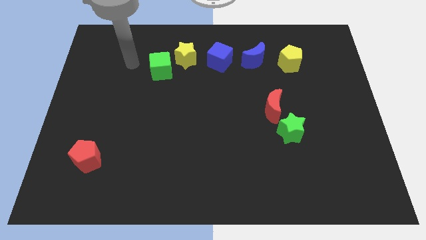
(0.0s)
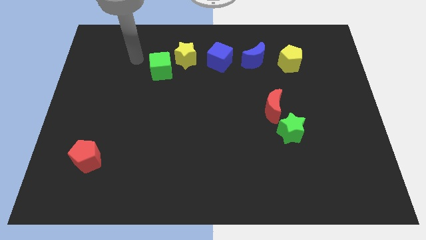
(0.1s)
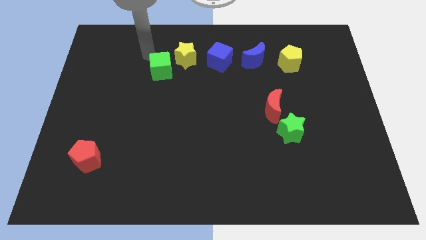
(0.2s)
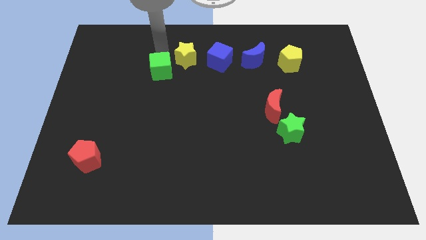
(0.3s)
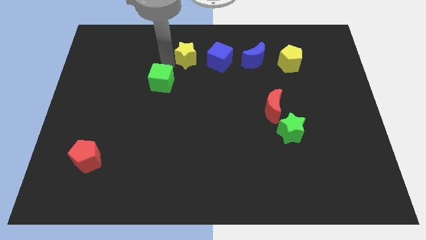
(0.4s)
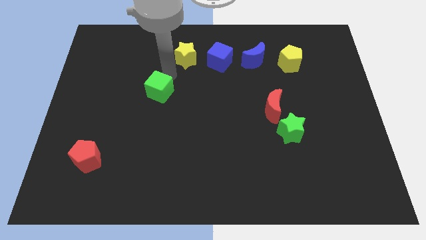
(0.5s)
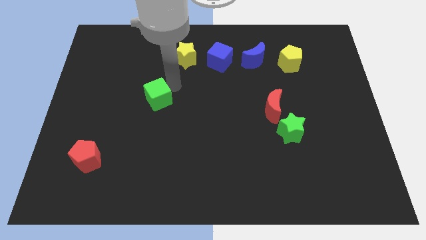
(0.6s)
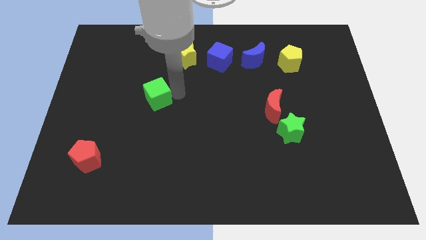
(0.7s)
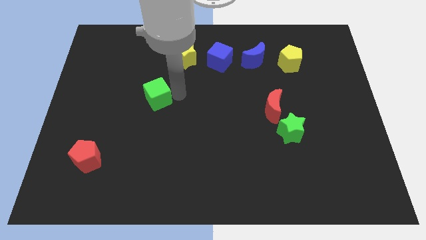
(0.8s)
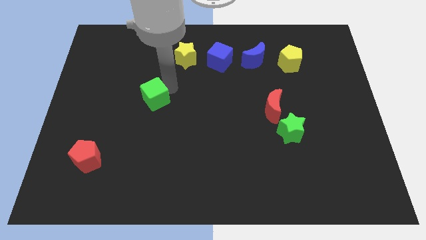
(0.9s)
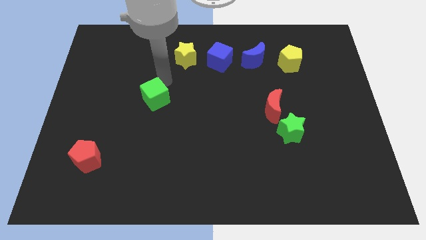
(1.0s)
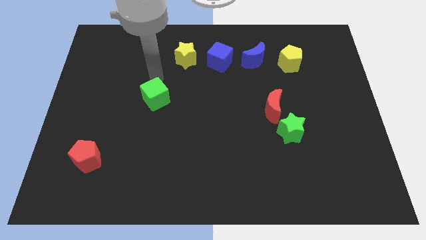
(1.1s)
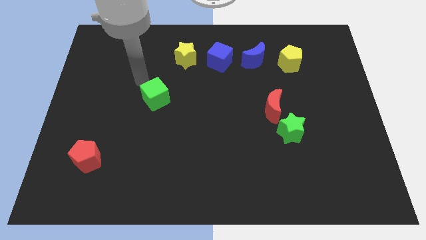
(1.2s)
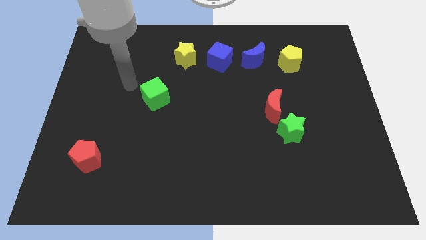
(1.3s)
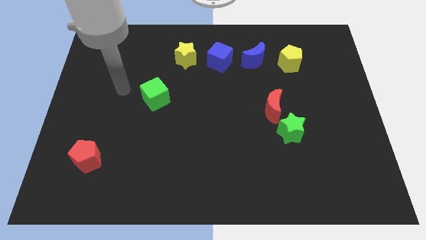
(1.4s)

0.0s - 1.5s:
push the green cube diagonally on the bottom left side of the yellow star

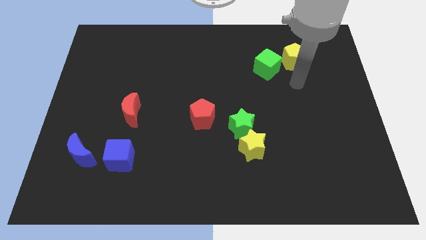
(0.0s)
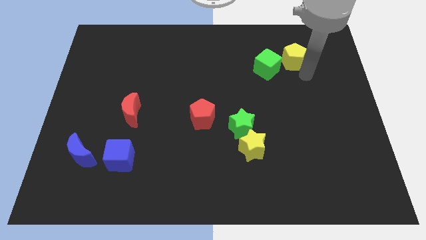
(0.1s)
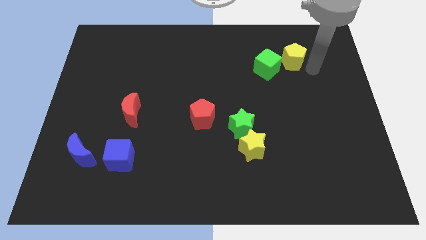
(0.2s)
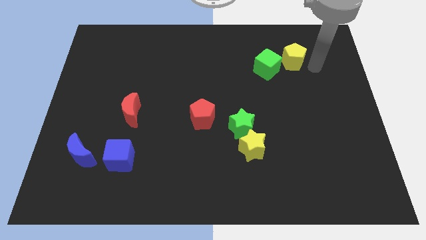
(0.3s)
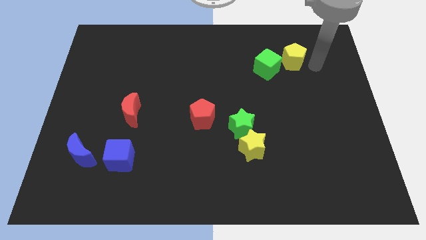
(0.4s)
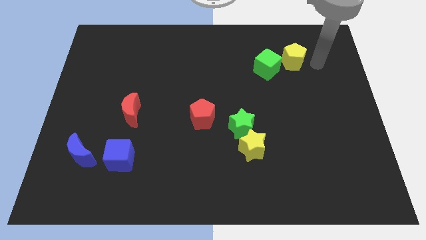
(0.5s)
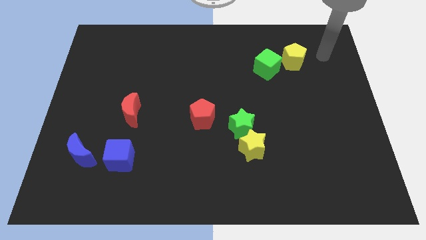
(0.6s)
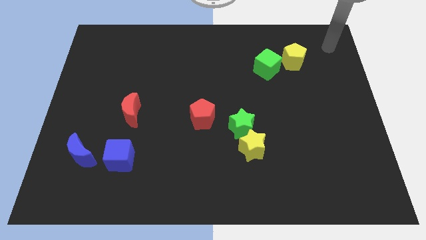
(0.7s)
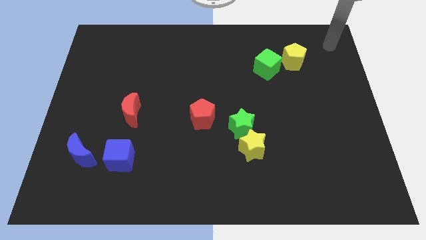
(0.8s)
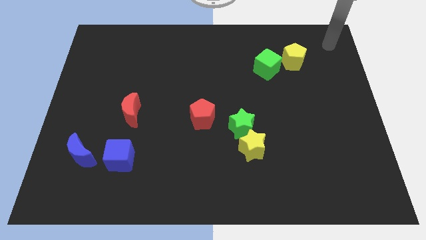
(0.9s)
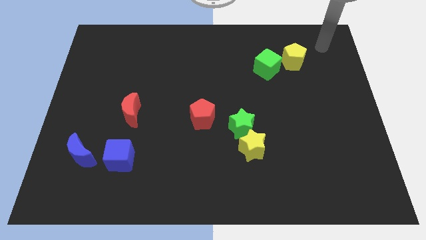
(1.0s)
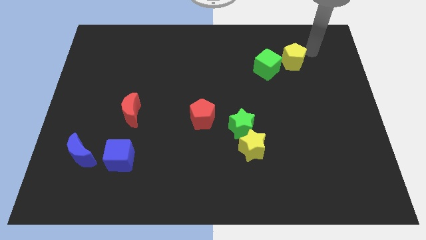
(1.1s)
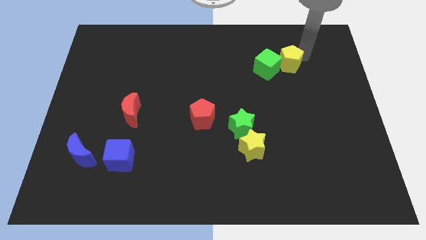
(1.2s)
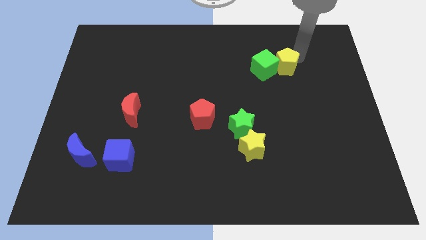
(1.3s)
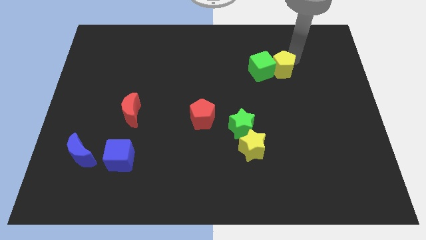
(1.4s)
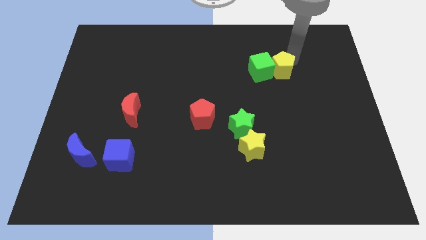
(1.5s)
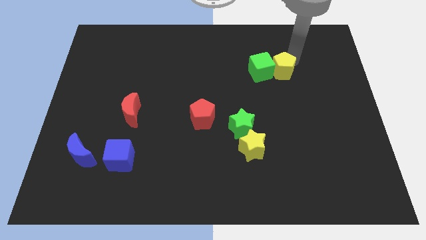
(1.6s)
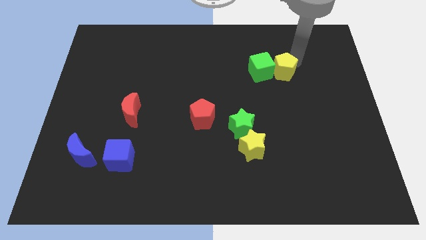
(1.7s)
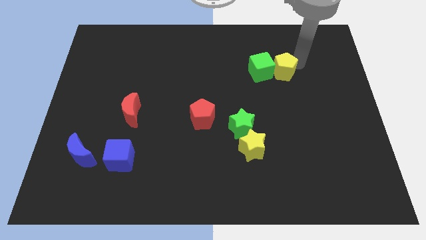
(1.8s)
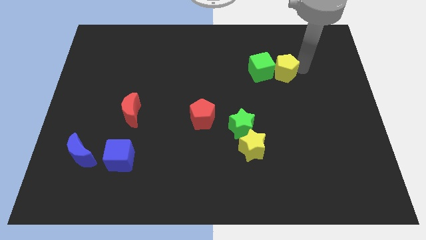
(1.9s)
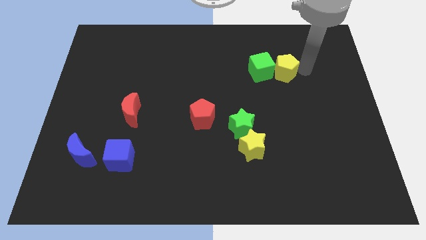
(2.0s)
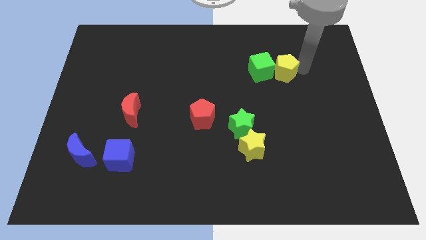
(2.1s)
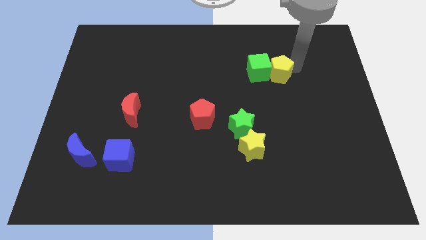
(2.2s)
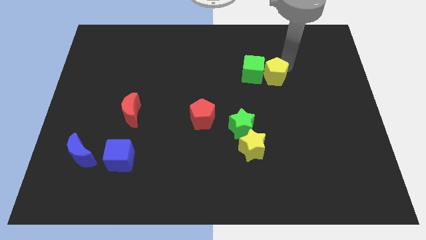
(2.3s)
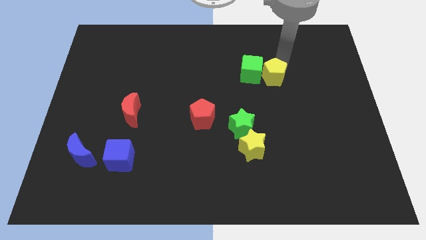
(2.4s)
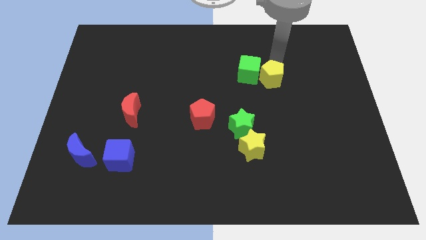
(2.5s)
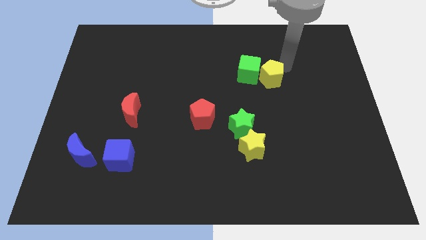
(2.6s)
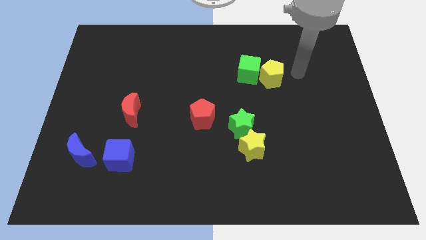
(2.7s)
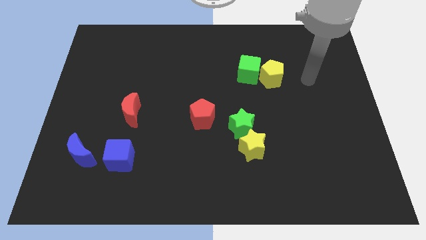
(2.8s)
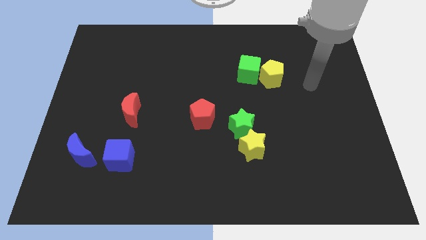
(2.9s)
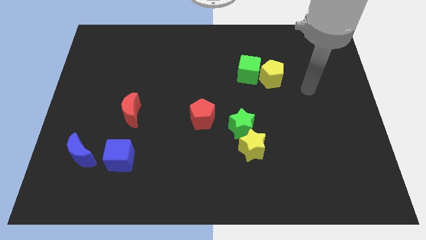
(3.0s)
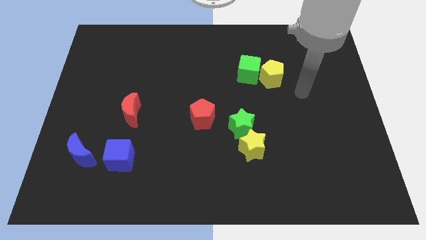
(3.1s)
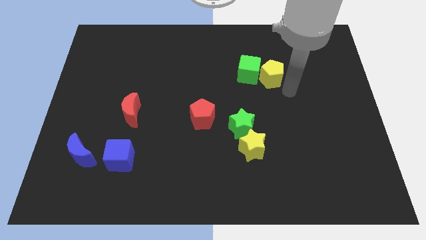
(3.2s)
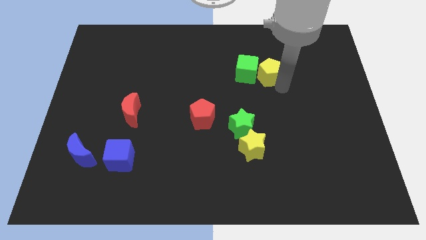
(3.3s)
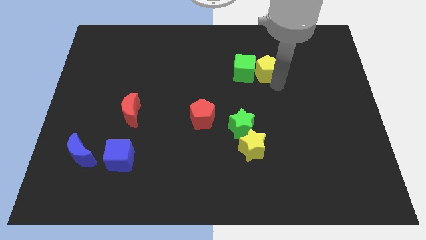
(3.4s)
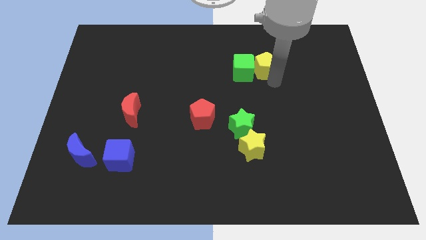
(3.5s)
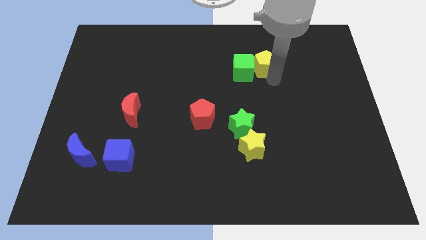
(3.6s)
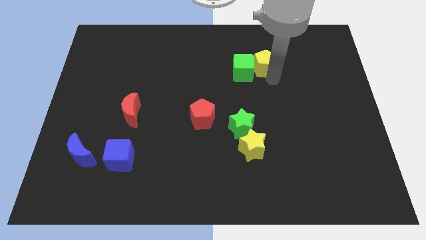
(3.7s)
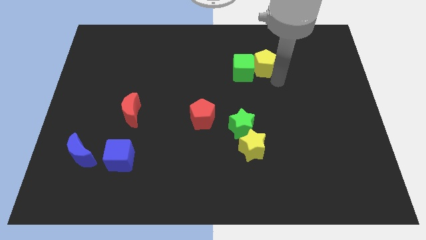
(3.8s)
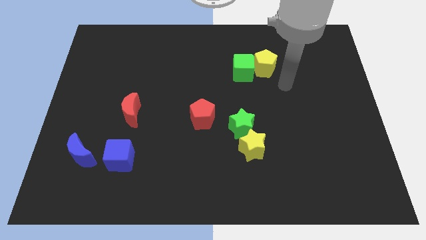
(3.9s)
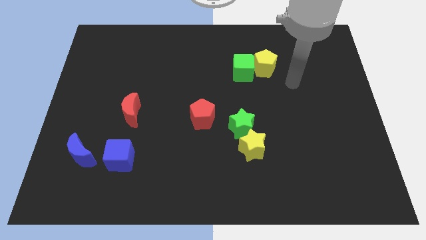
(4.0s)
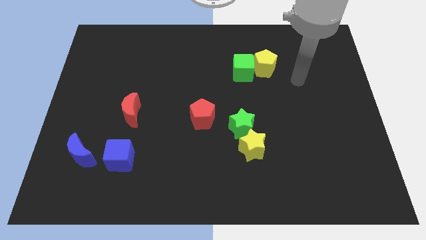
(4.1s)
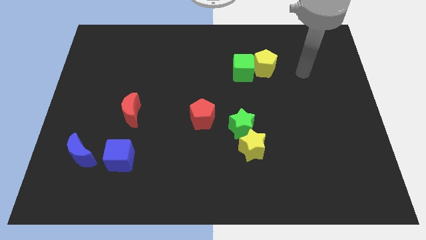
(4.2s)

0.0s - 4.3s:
move yellow pentagon into green cube

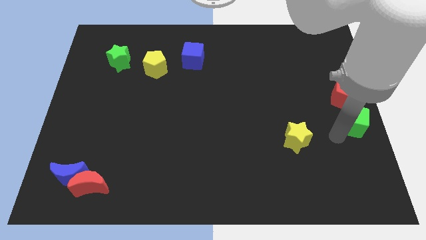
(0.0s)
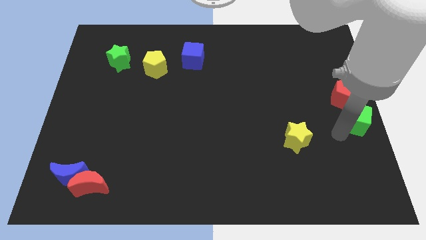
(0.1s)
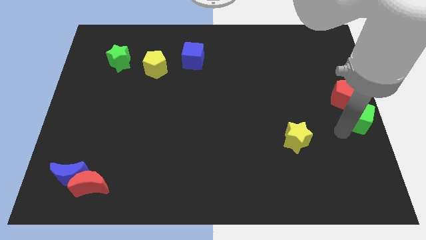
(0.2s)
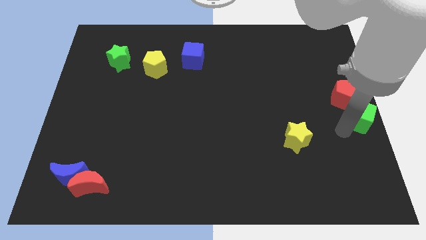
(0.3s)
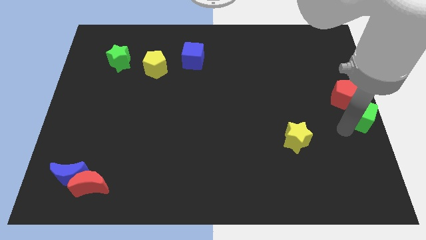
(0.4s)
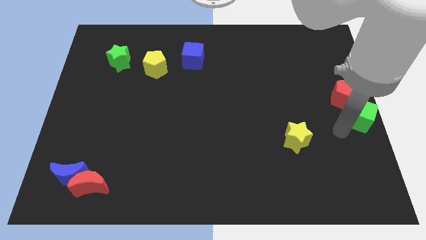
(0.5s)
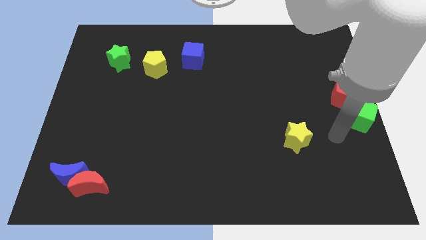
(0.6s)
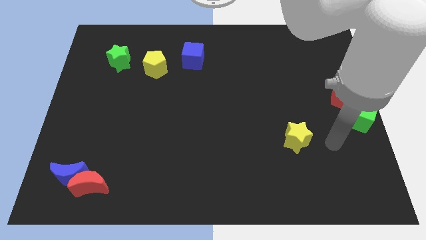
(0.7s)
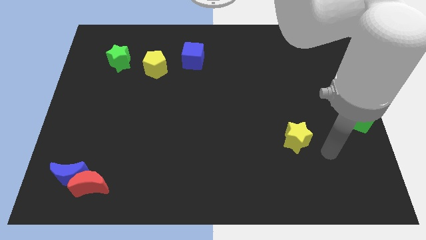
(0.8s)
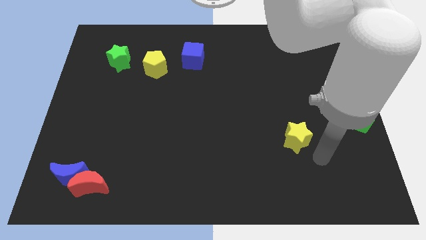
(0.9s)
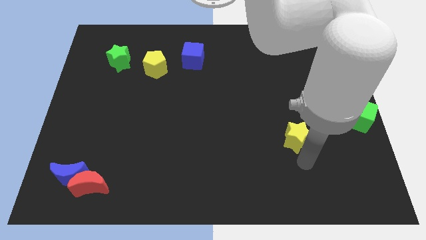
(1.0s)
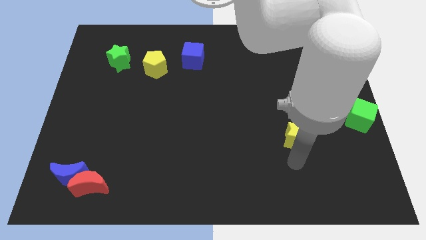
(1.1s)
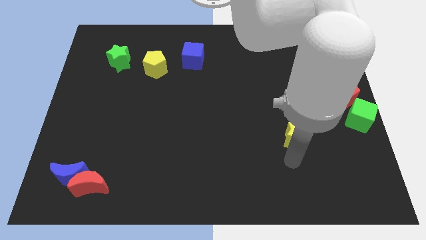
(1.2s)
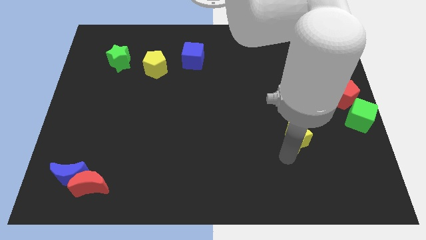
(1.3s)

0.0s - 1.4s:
move your arm to the bottom side of the yellow star

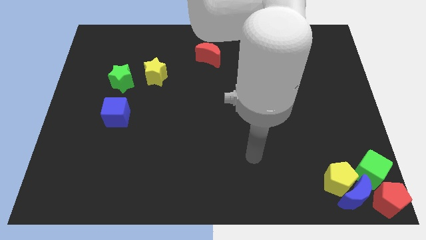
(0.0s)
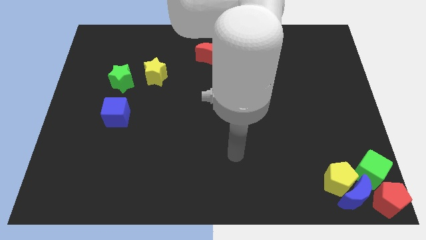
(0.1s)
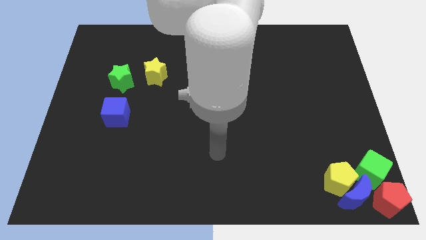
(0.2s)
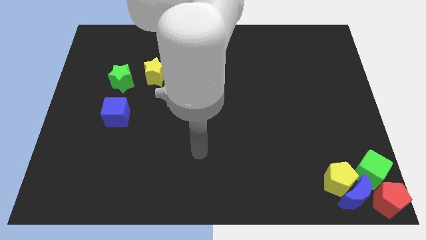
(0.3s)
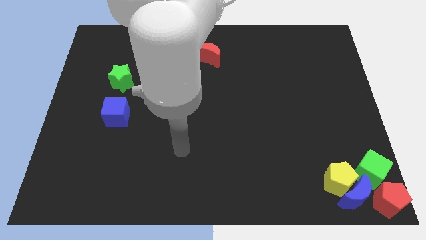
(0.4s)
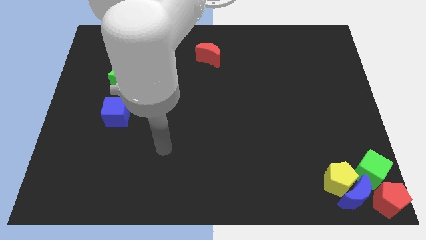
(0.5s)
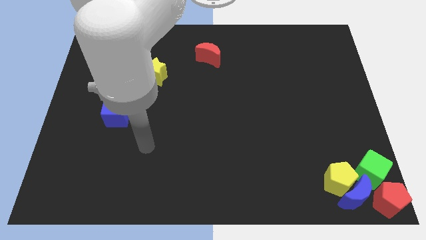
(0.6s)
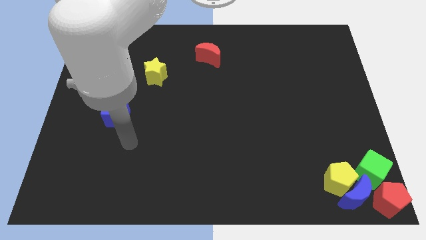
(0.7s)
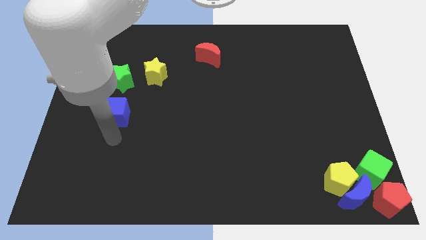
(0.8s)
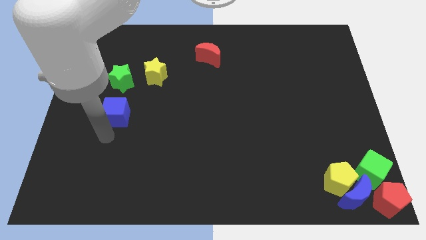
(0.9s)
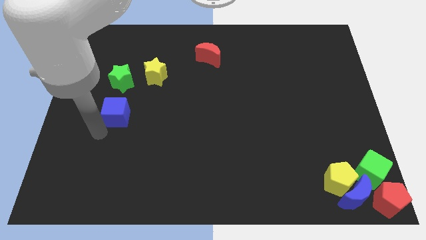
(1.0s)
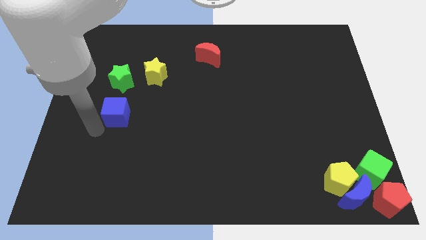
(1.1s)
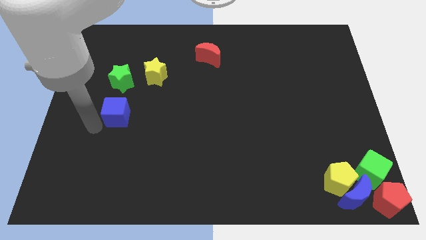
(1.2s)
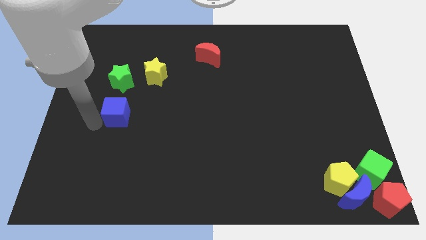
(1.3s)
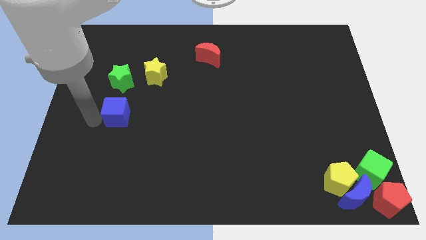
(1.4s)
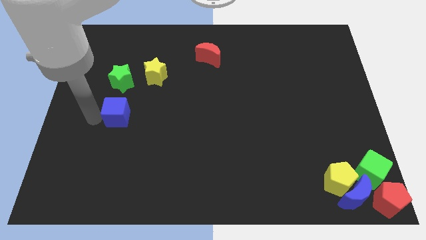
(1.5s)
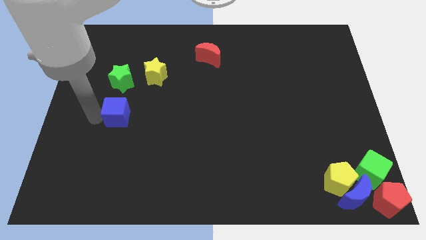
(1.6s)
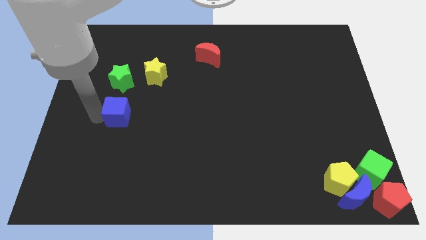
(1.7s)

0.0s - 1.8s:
move the arm towards the left of the blue cube

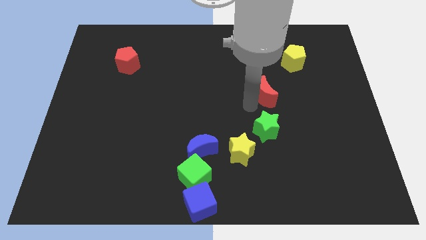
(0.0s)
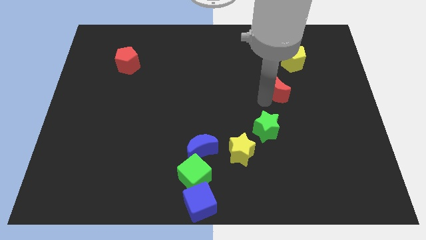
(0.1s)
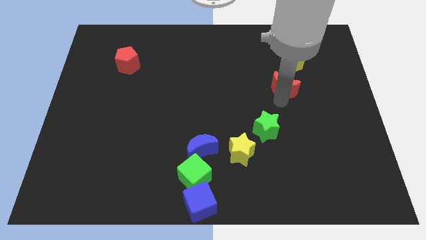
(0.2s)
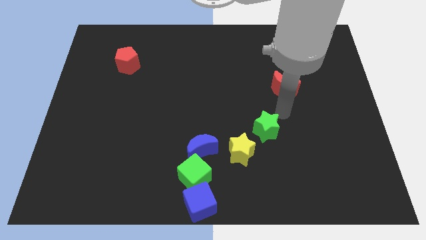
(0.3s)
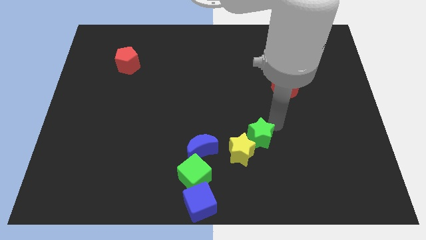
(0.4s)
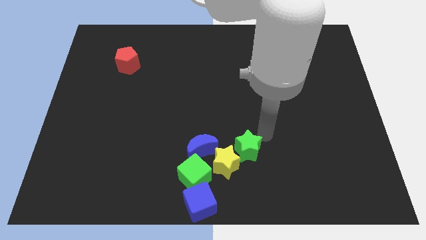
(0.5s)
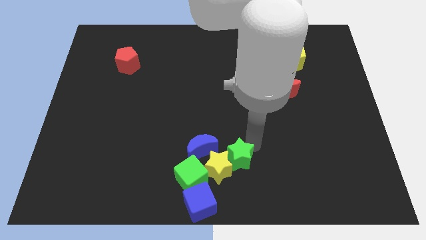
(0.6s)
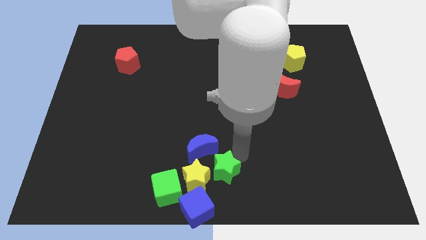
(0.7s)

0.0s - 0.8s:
move the yellow star and green star into the green cube
